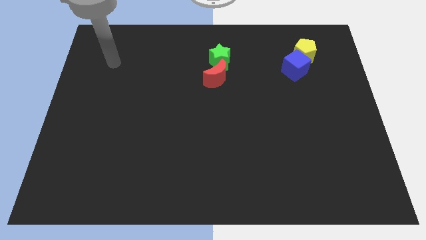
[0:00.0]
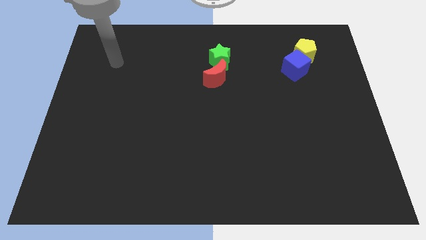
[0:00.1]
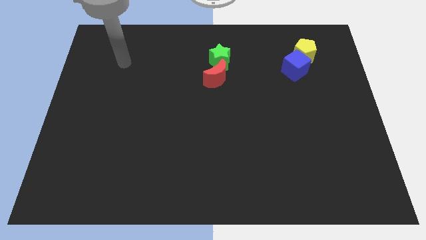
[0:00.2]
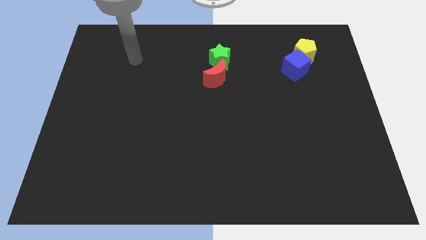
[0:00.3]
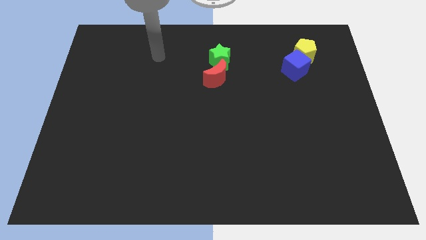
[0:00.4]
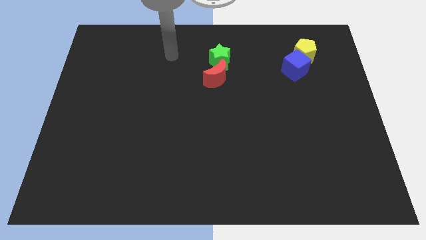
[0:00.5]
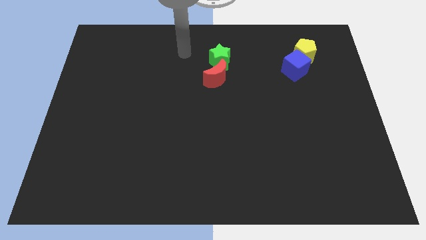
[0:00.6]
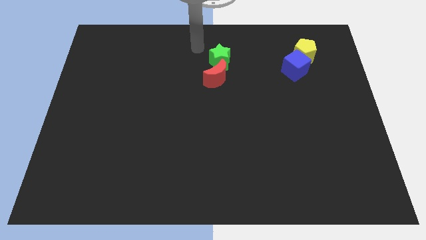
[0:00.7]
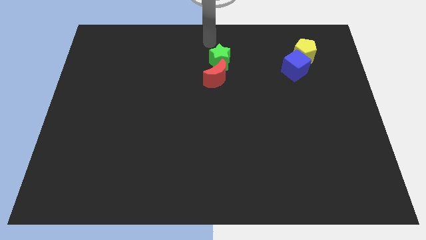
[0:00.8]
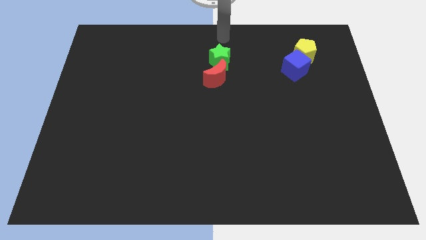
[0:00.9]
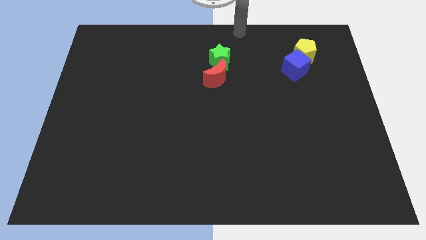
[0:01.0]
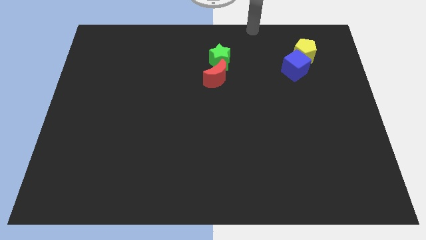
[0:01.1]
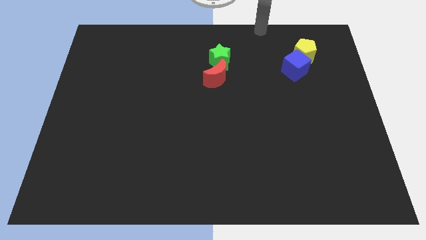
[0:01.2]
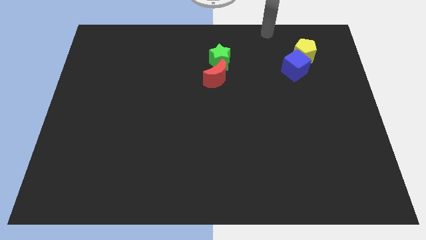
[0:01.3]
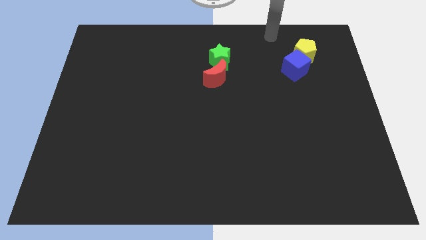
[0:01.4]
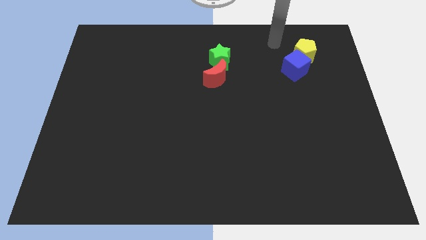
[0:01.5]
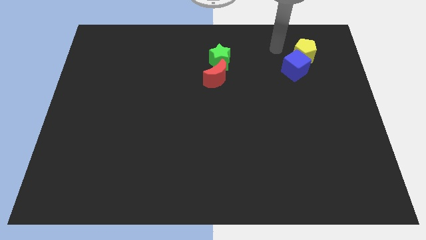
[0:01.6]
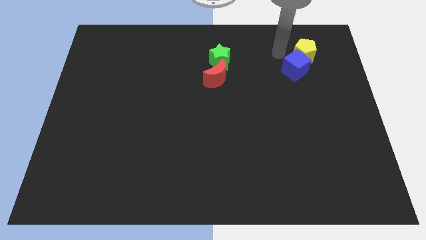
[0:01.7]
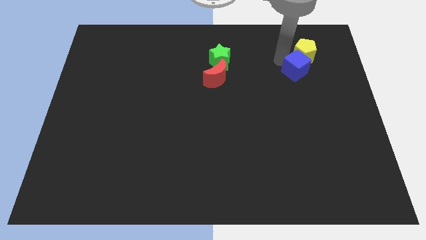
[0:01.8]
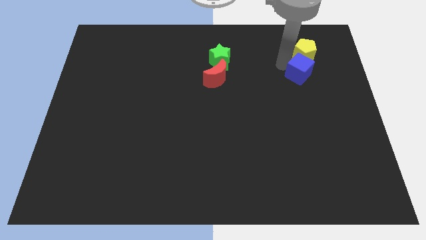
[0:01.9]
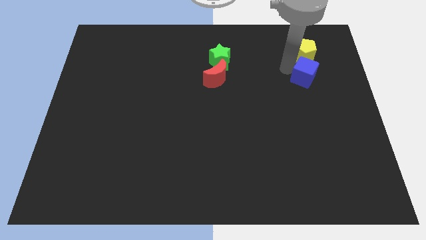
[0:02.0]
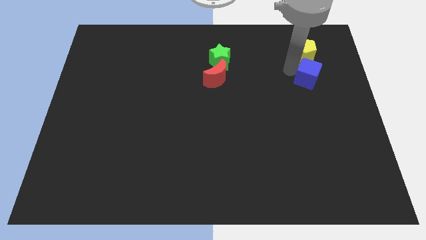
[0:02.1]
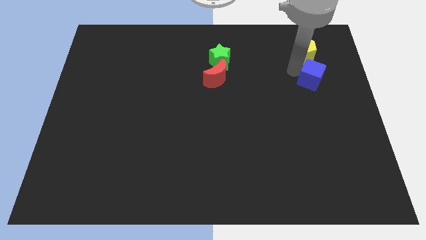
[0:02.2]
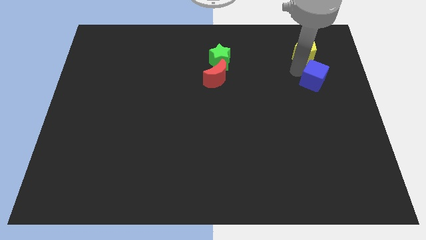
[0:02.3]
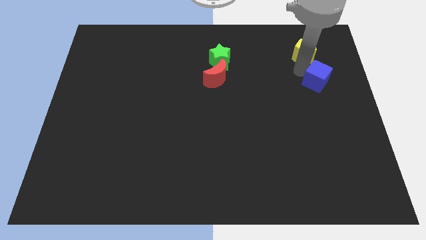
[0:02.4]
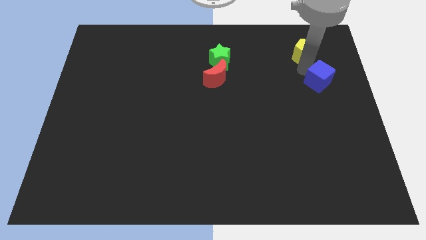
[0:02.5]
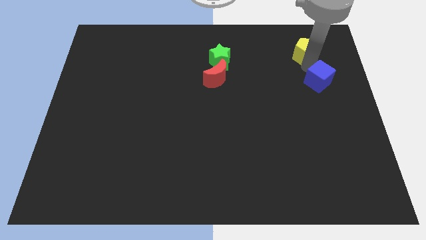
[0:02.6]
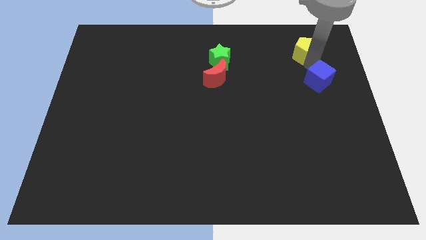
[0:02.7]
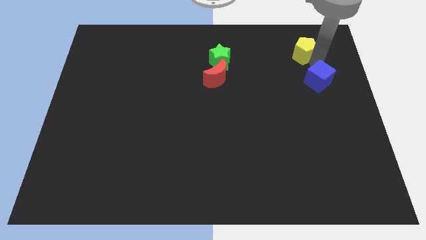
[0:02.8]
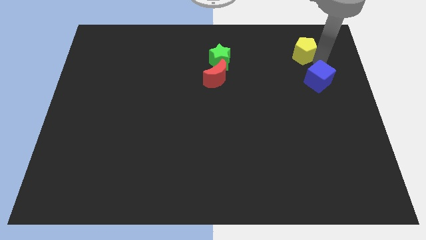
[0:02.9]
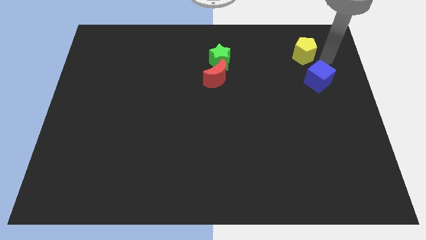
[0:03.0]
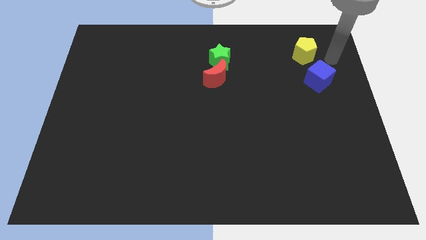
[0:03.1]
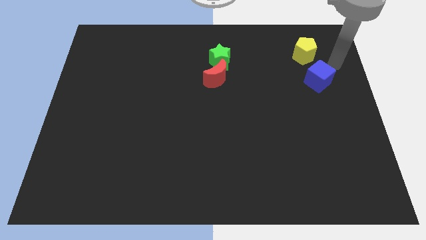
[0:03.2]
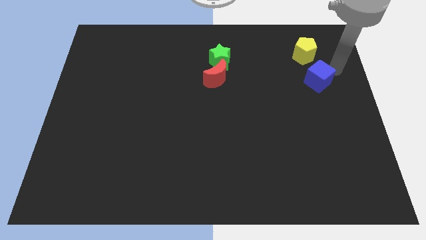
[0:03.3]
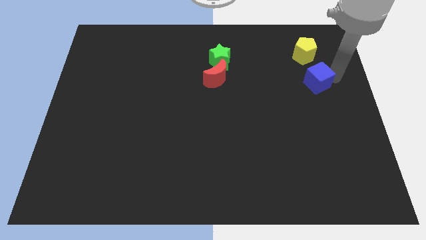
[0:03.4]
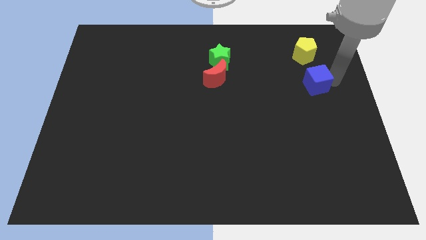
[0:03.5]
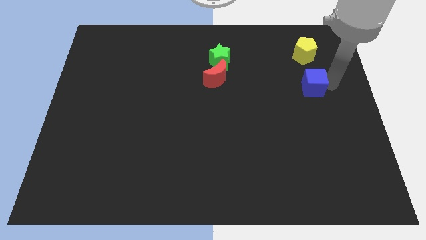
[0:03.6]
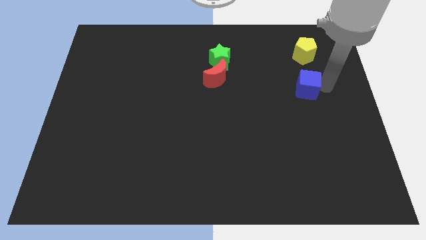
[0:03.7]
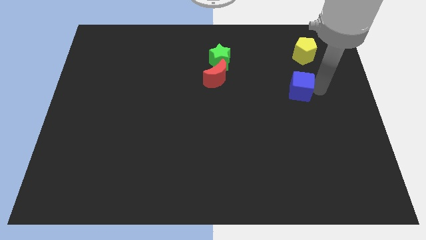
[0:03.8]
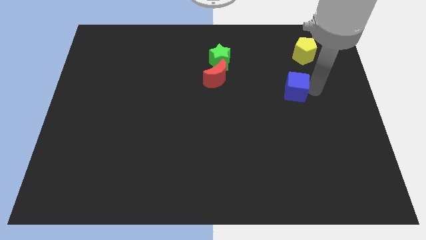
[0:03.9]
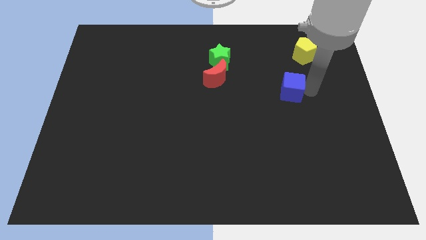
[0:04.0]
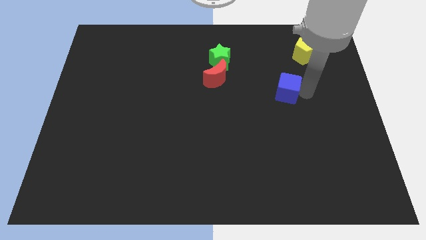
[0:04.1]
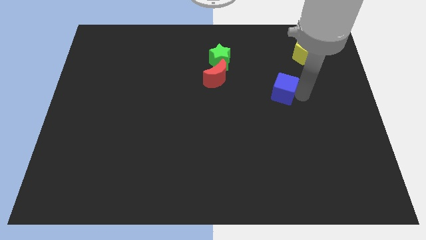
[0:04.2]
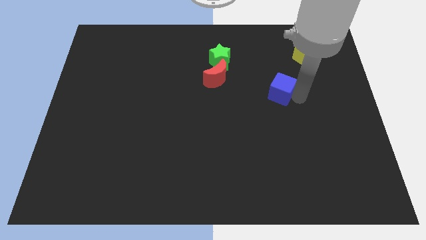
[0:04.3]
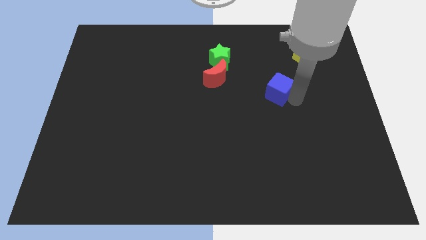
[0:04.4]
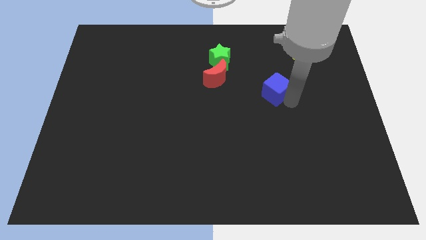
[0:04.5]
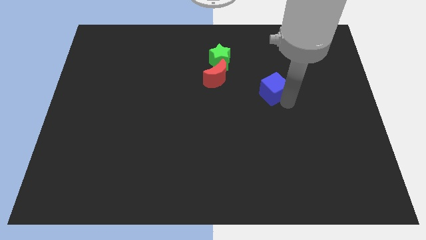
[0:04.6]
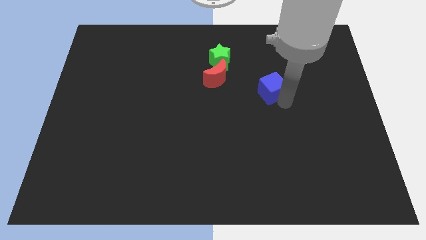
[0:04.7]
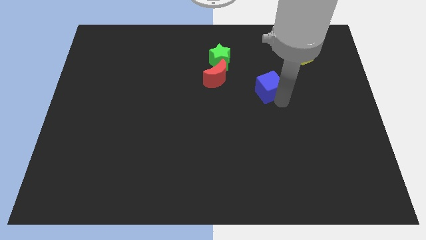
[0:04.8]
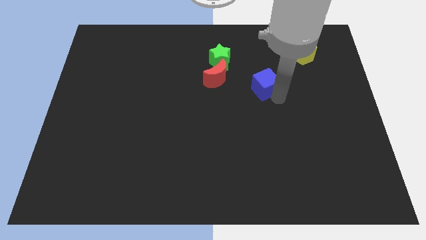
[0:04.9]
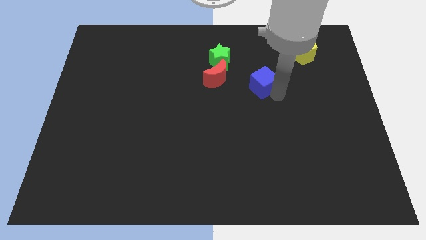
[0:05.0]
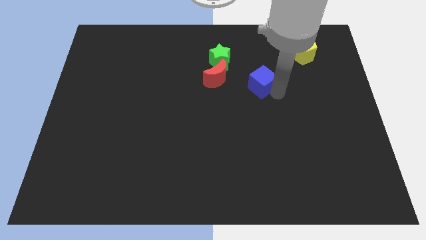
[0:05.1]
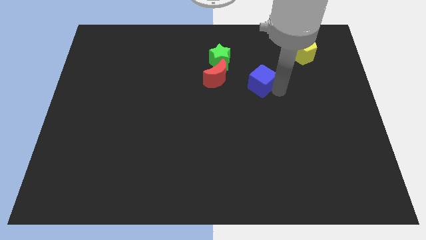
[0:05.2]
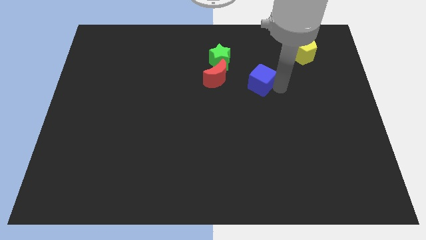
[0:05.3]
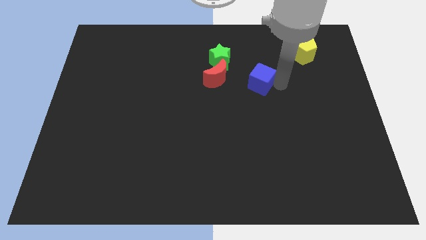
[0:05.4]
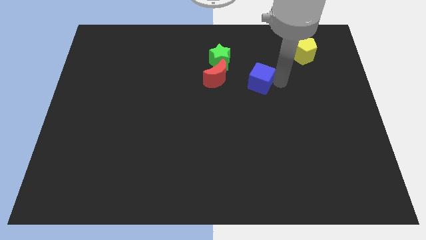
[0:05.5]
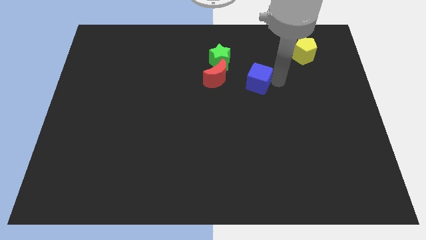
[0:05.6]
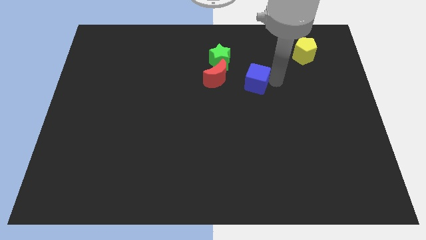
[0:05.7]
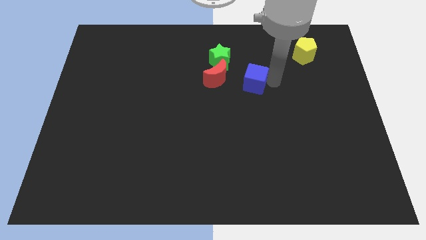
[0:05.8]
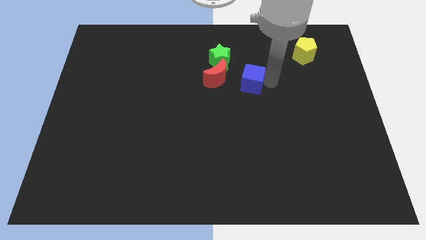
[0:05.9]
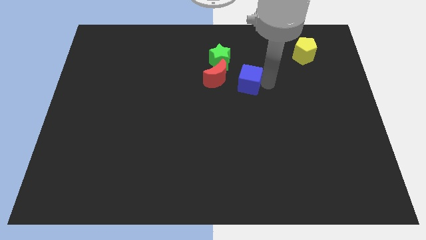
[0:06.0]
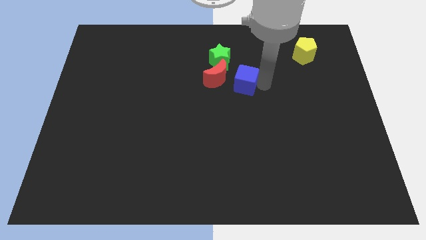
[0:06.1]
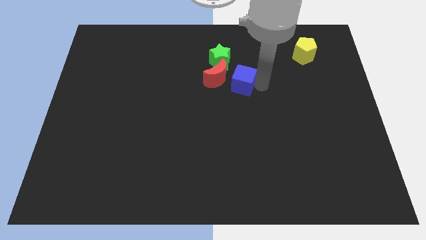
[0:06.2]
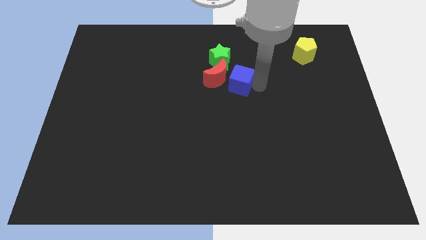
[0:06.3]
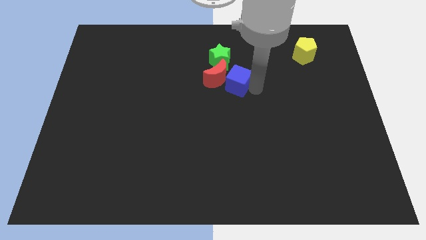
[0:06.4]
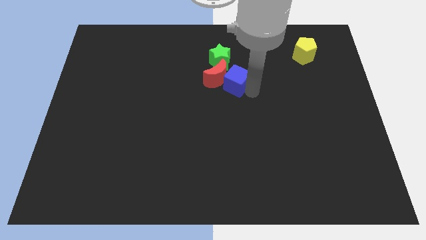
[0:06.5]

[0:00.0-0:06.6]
slide the blue block to the red moon

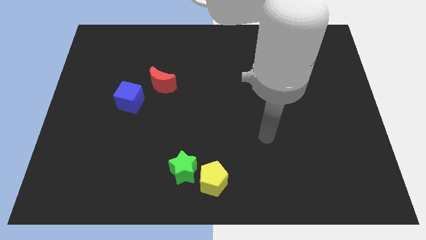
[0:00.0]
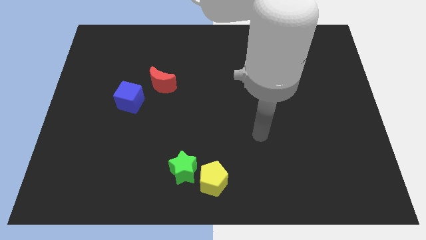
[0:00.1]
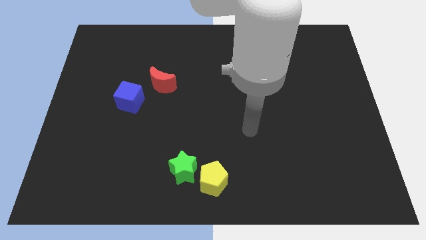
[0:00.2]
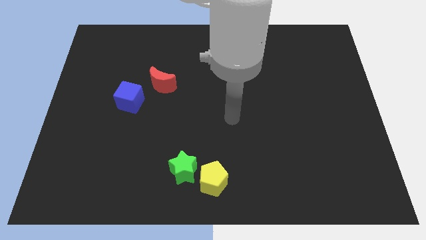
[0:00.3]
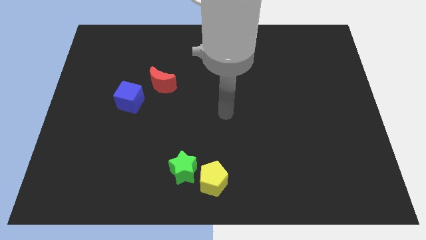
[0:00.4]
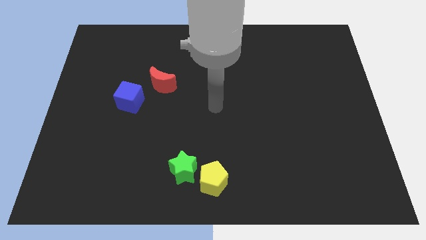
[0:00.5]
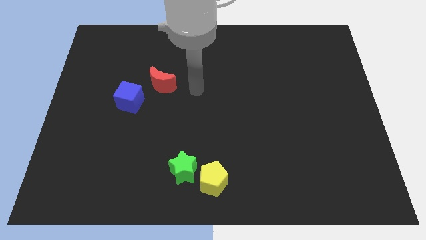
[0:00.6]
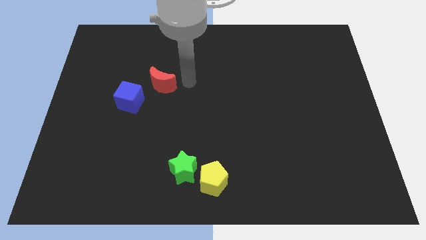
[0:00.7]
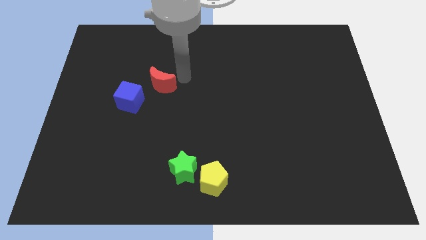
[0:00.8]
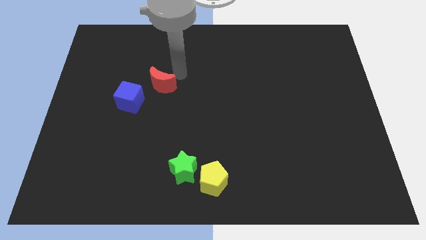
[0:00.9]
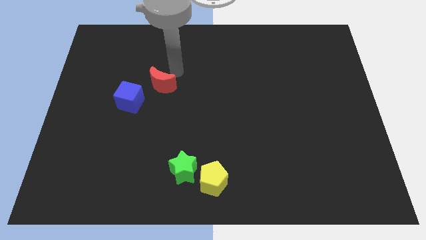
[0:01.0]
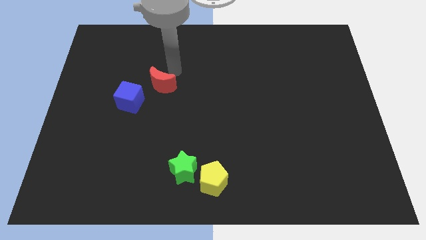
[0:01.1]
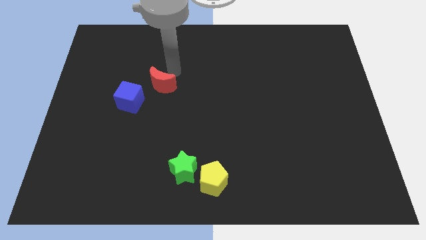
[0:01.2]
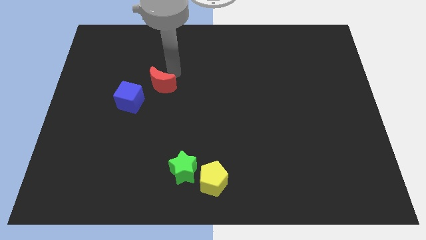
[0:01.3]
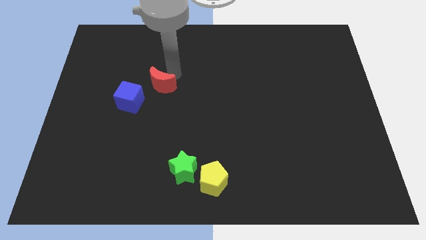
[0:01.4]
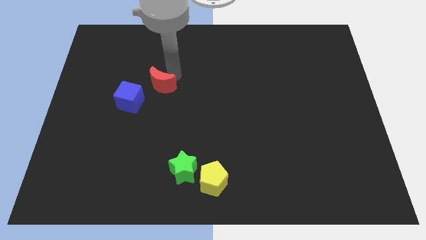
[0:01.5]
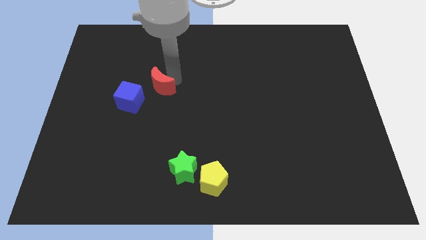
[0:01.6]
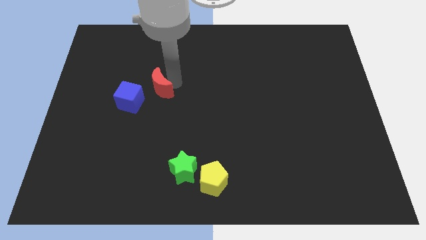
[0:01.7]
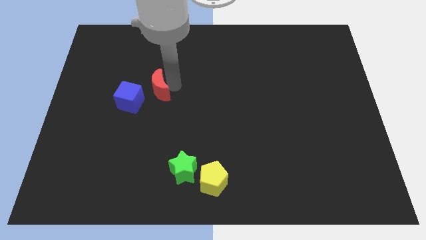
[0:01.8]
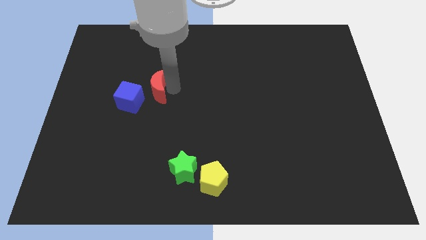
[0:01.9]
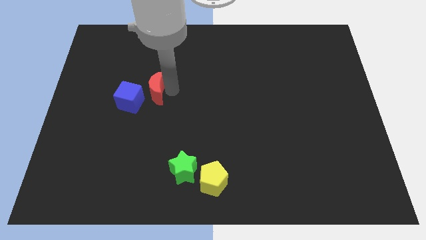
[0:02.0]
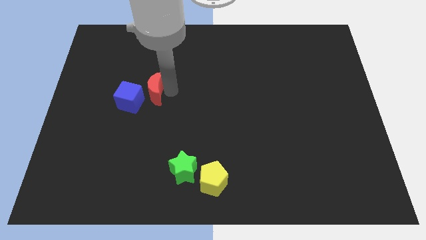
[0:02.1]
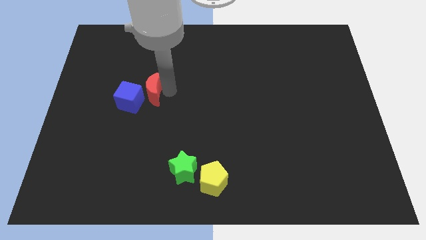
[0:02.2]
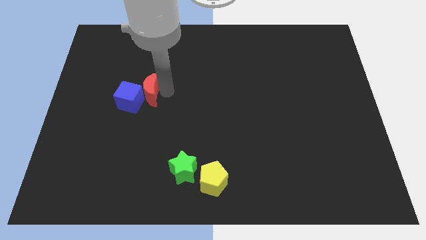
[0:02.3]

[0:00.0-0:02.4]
push the red block next to the cube
